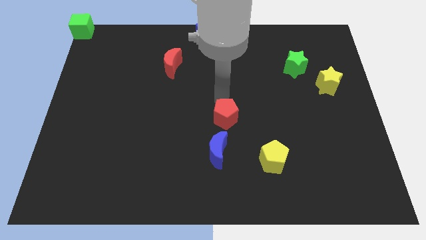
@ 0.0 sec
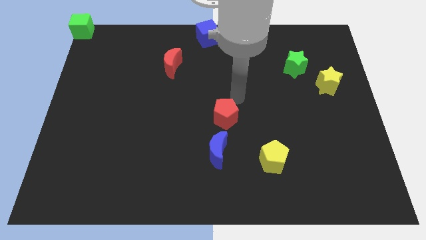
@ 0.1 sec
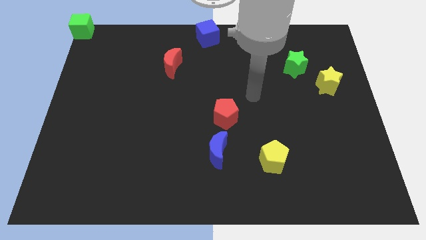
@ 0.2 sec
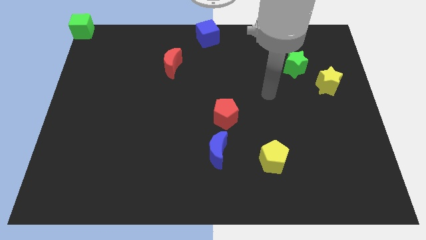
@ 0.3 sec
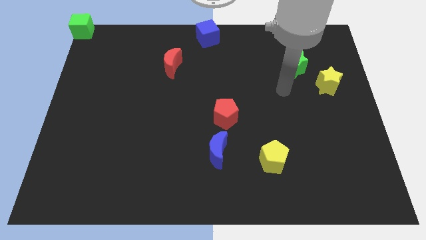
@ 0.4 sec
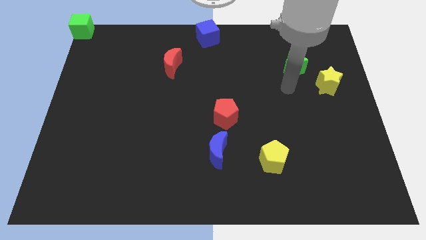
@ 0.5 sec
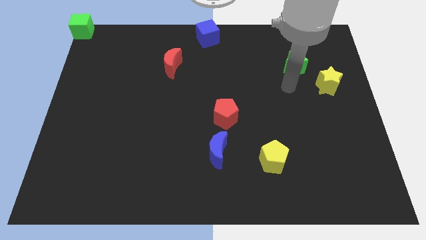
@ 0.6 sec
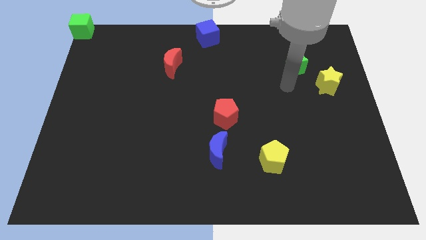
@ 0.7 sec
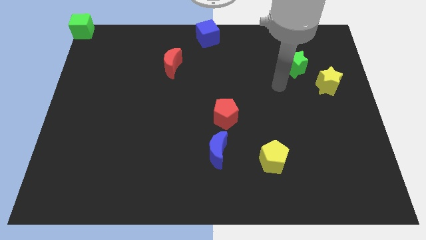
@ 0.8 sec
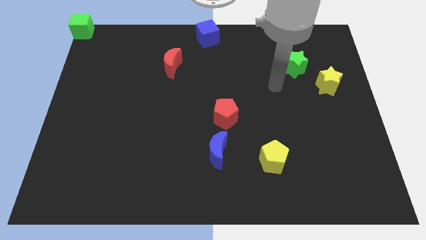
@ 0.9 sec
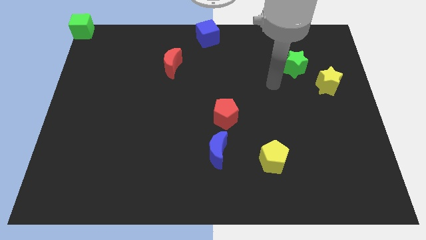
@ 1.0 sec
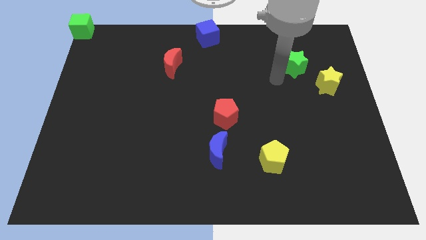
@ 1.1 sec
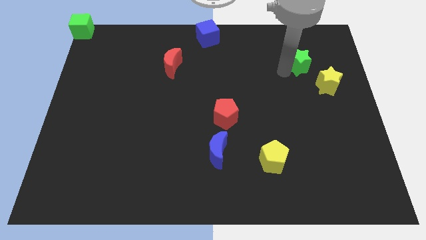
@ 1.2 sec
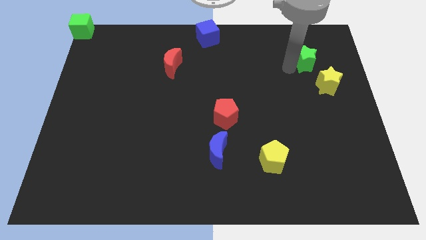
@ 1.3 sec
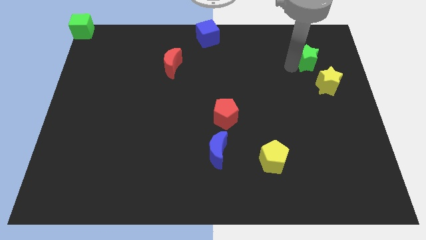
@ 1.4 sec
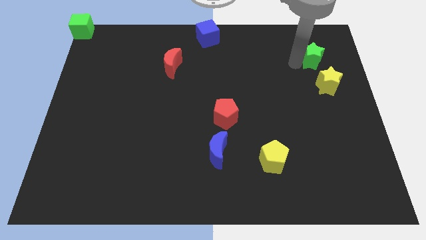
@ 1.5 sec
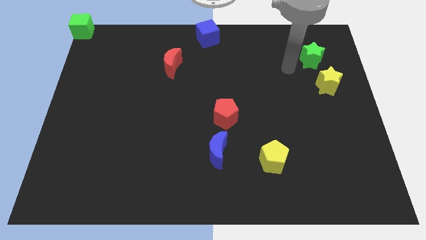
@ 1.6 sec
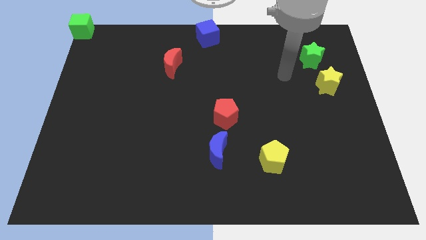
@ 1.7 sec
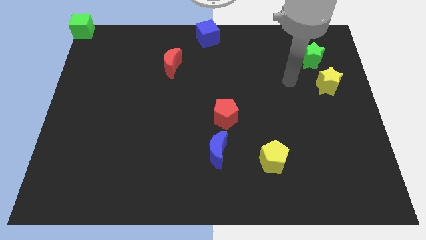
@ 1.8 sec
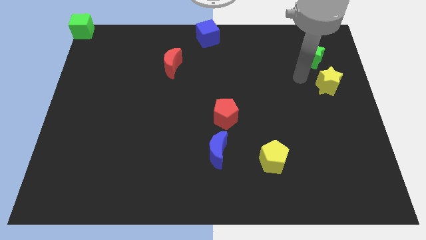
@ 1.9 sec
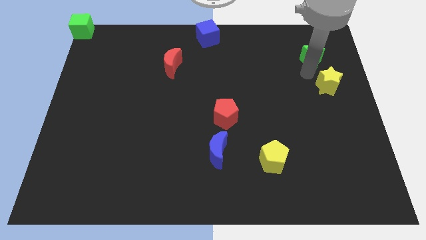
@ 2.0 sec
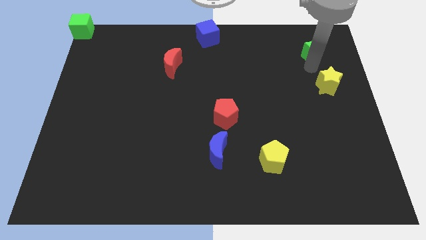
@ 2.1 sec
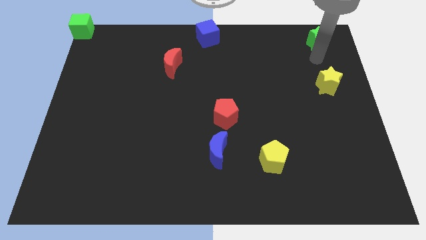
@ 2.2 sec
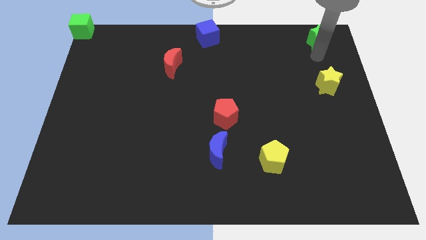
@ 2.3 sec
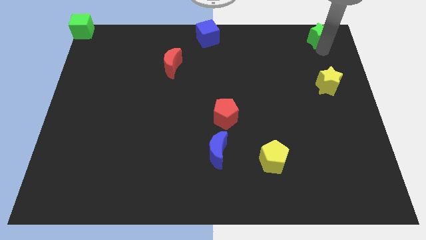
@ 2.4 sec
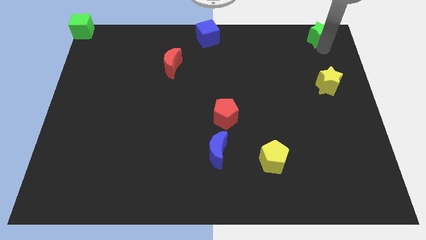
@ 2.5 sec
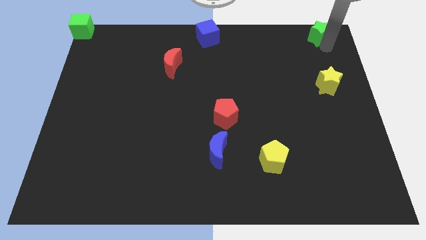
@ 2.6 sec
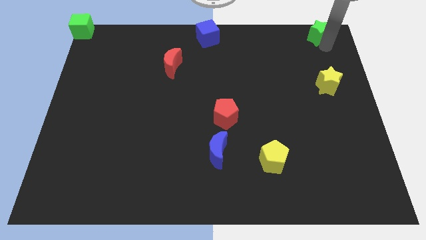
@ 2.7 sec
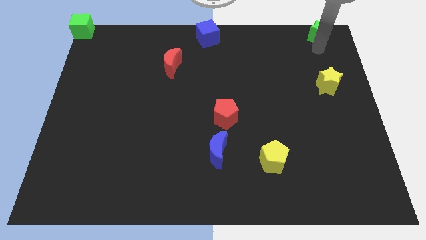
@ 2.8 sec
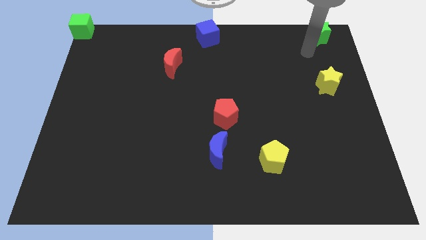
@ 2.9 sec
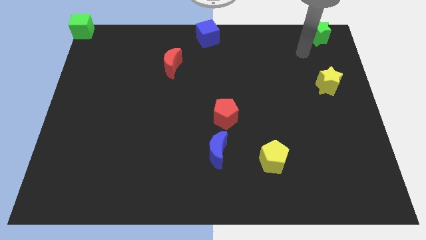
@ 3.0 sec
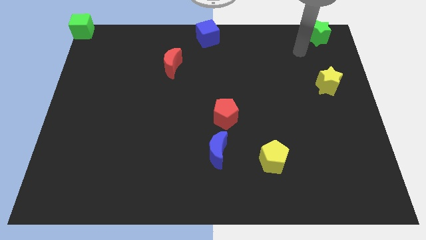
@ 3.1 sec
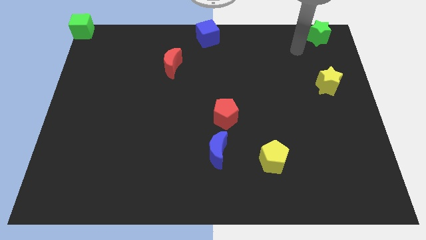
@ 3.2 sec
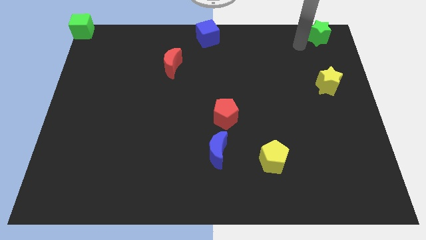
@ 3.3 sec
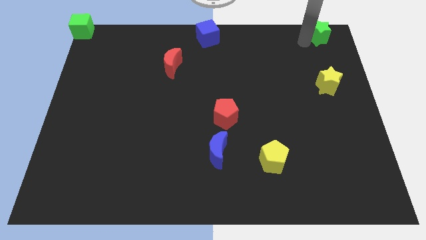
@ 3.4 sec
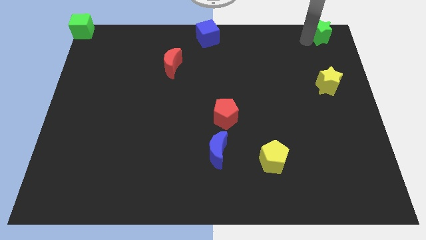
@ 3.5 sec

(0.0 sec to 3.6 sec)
slide the green star vertically above the yellow star

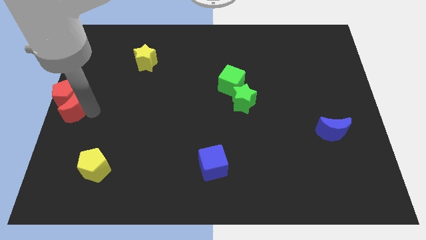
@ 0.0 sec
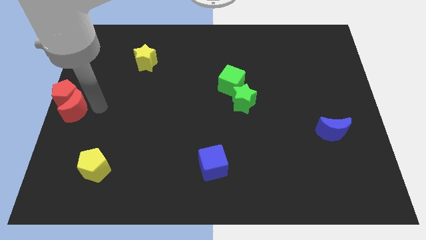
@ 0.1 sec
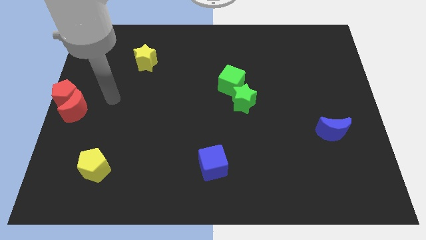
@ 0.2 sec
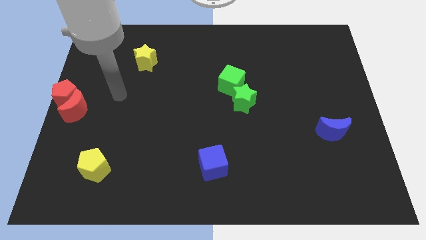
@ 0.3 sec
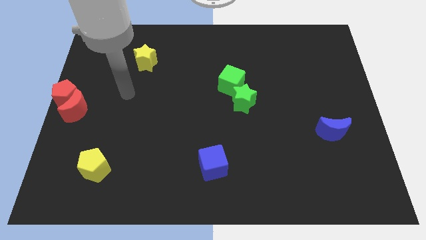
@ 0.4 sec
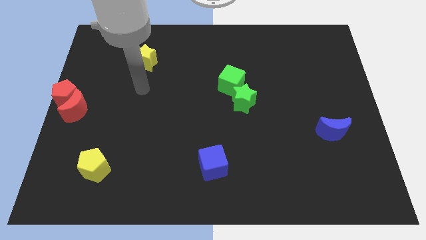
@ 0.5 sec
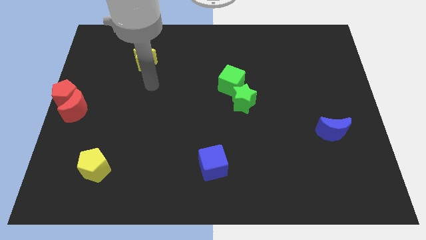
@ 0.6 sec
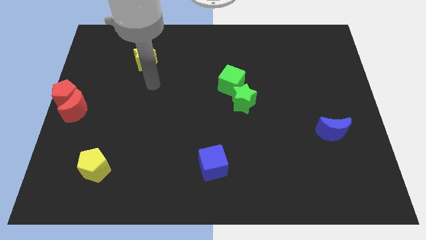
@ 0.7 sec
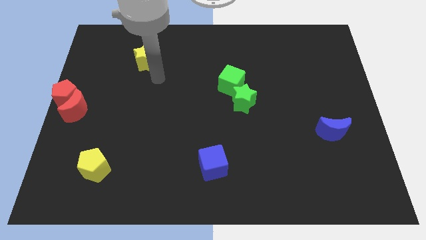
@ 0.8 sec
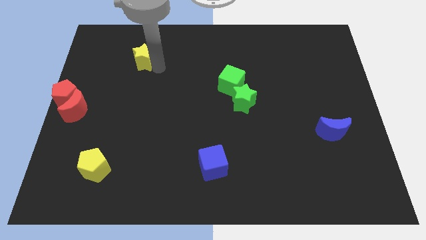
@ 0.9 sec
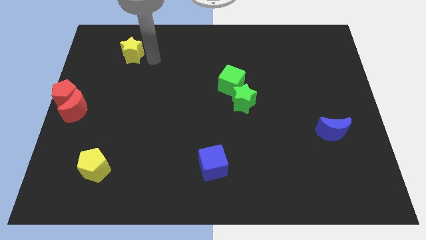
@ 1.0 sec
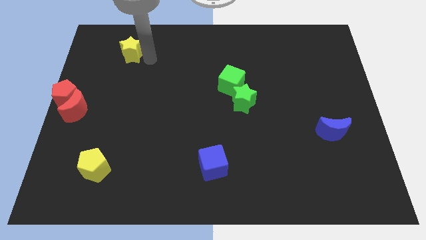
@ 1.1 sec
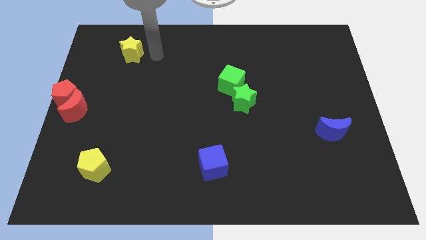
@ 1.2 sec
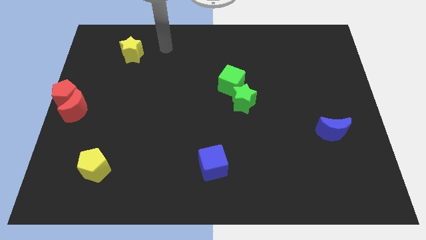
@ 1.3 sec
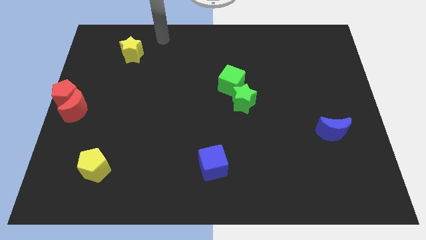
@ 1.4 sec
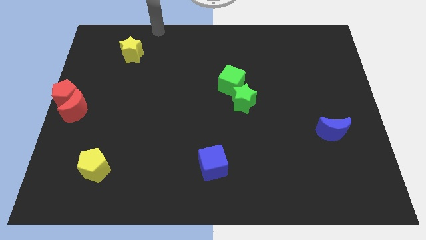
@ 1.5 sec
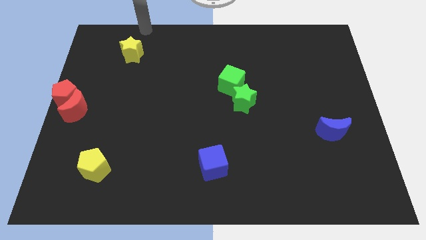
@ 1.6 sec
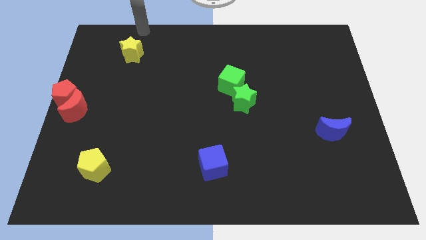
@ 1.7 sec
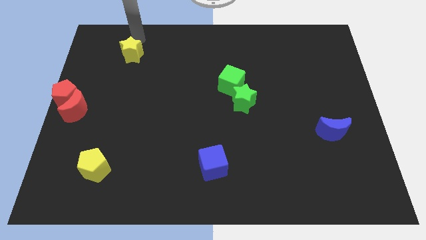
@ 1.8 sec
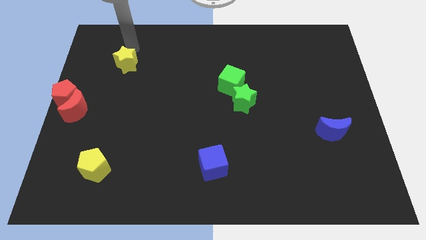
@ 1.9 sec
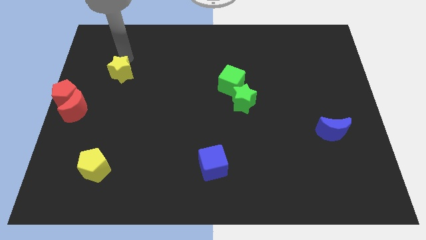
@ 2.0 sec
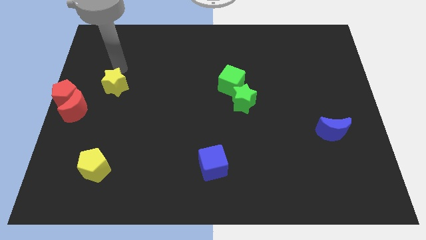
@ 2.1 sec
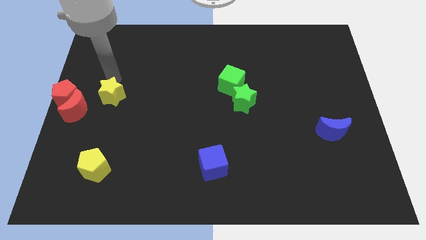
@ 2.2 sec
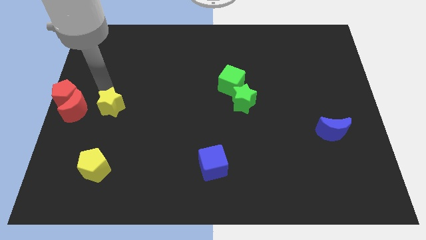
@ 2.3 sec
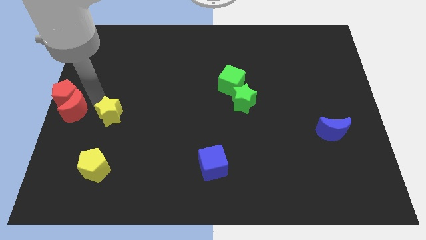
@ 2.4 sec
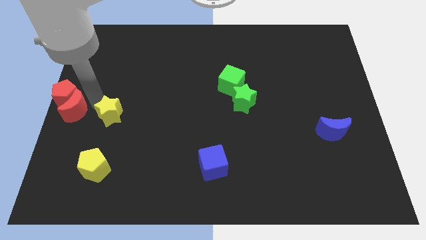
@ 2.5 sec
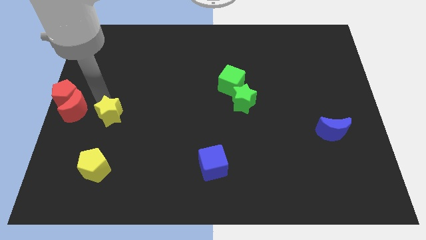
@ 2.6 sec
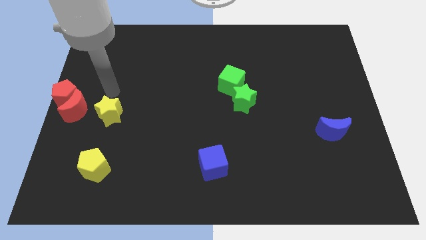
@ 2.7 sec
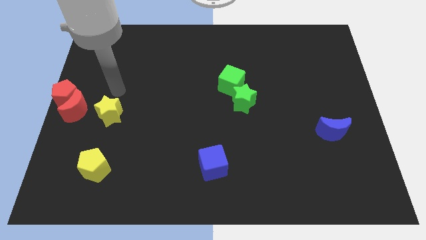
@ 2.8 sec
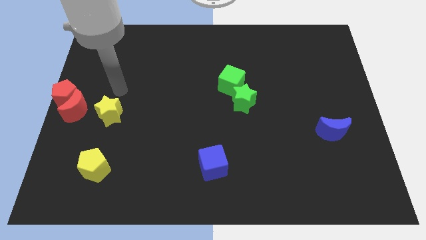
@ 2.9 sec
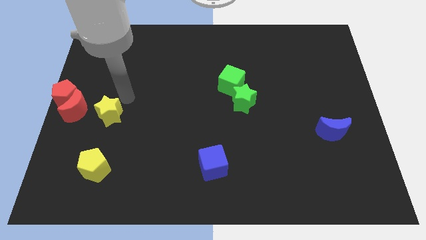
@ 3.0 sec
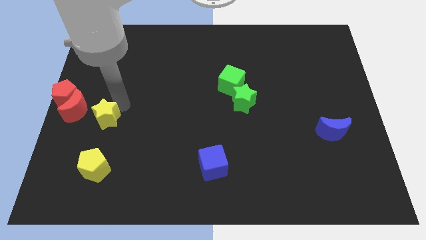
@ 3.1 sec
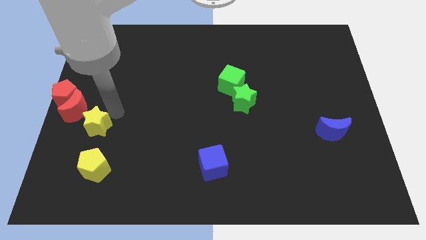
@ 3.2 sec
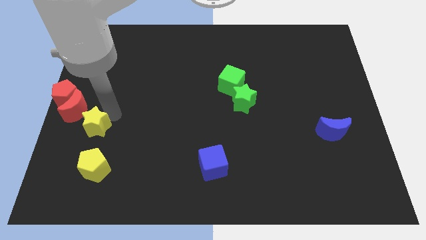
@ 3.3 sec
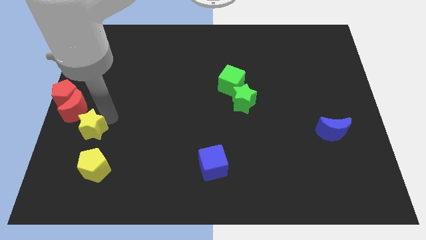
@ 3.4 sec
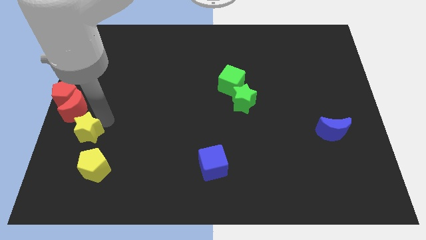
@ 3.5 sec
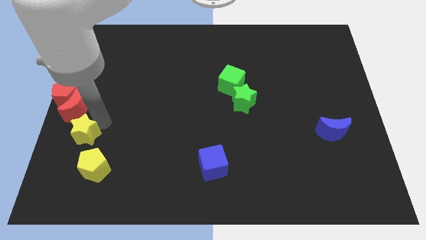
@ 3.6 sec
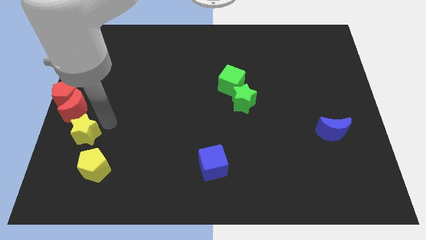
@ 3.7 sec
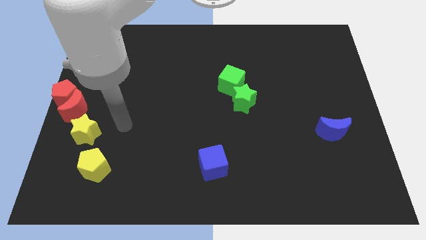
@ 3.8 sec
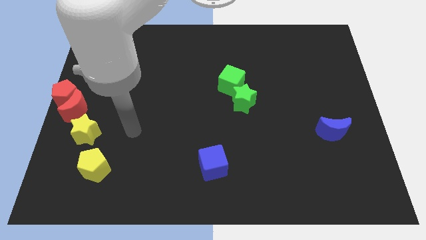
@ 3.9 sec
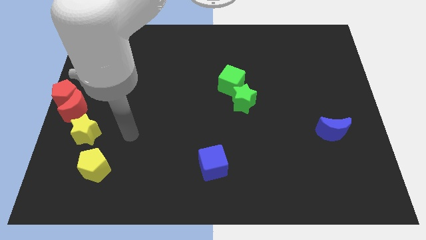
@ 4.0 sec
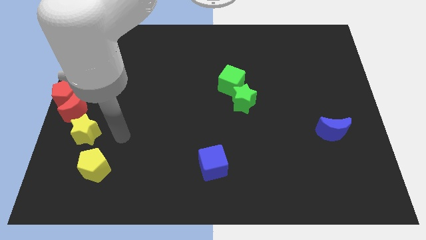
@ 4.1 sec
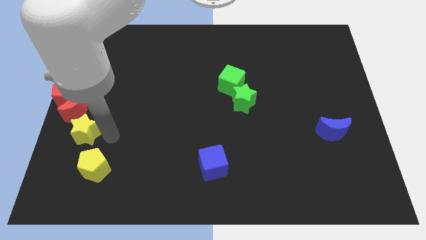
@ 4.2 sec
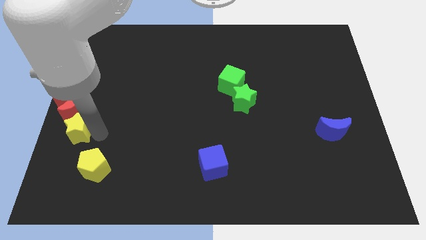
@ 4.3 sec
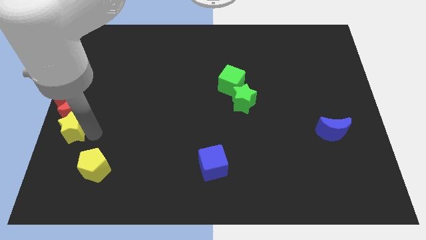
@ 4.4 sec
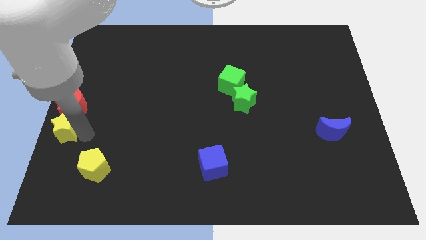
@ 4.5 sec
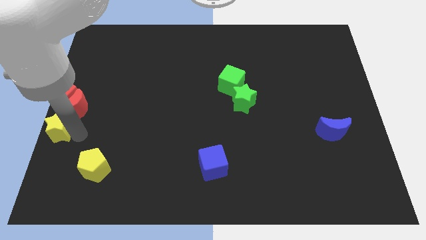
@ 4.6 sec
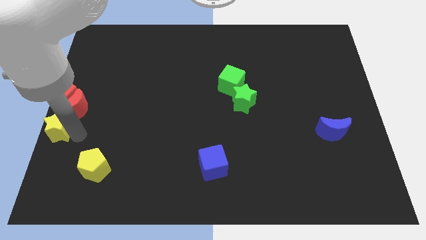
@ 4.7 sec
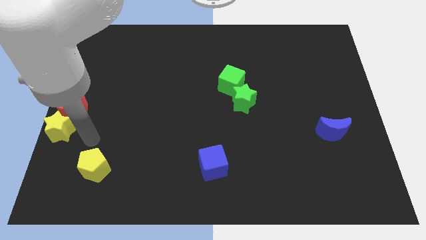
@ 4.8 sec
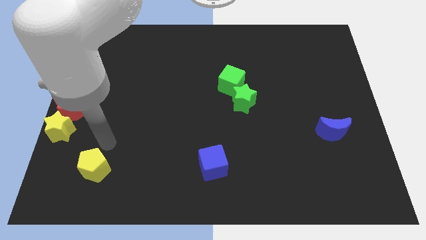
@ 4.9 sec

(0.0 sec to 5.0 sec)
put the yellow star below the red crescent

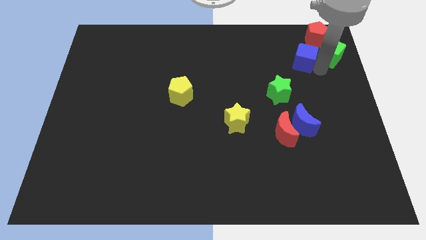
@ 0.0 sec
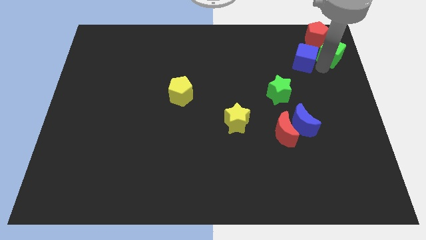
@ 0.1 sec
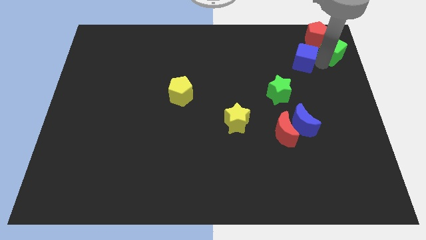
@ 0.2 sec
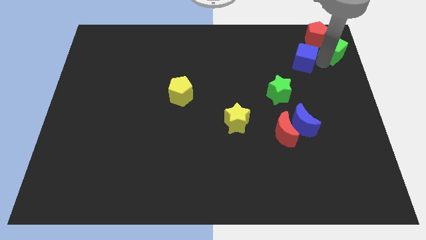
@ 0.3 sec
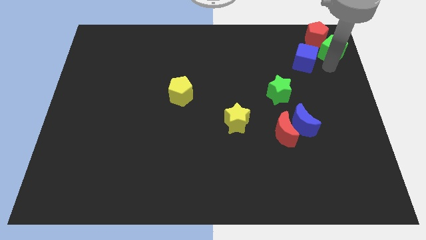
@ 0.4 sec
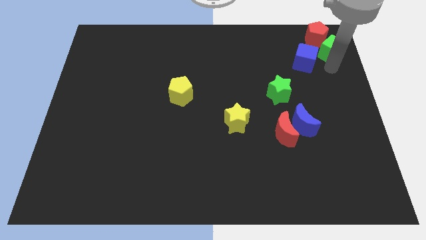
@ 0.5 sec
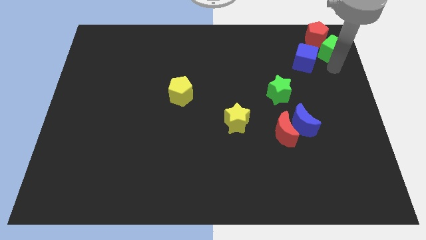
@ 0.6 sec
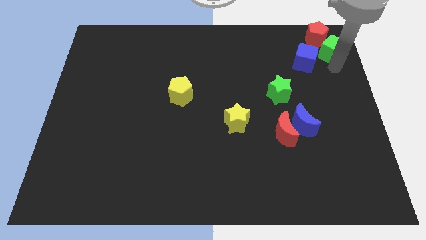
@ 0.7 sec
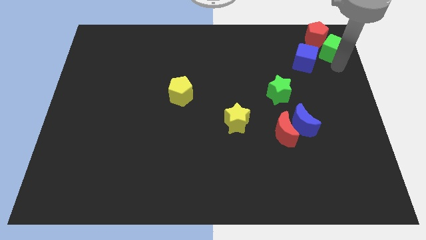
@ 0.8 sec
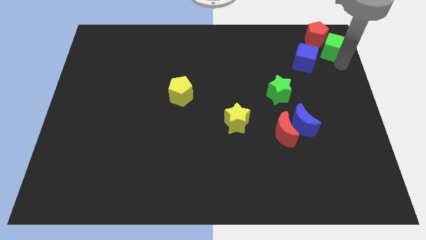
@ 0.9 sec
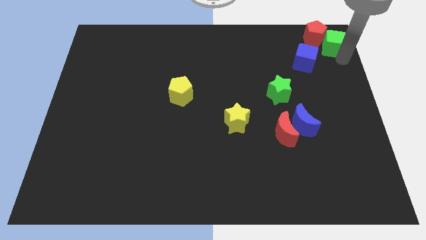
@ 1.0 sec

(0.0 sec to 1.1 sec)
push green cube to the top right
